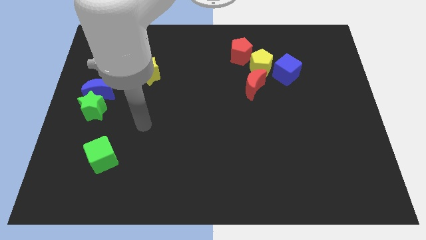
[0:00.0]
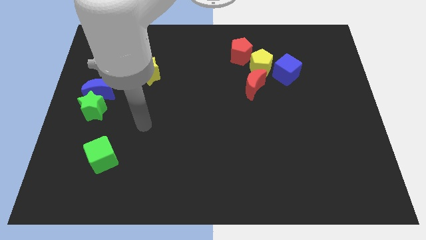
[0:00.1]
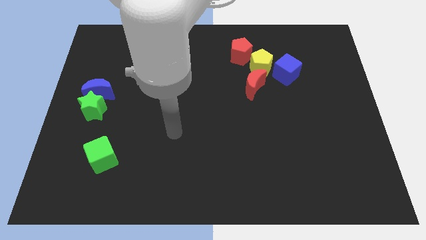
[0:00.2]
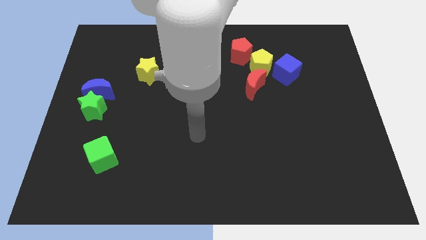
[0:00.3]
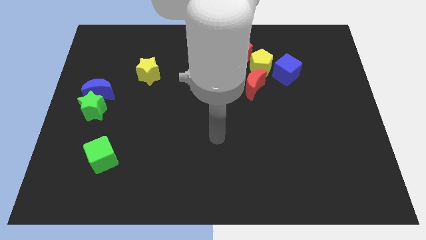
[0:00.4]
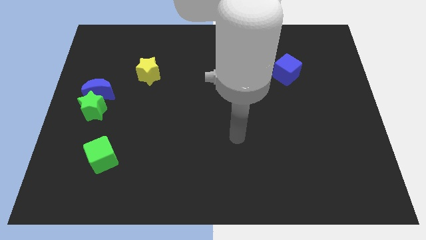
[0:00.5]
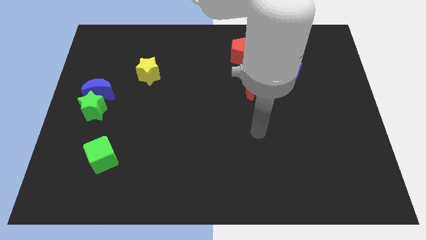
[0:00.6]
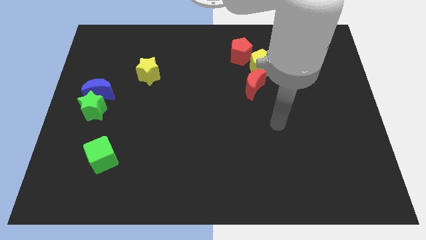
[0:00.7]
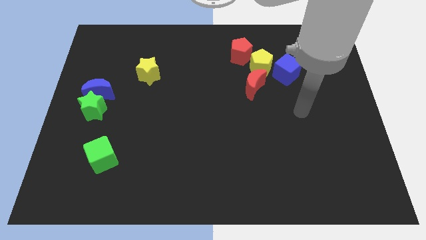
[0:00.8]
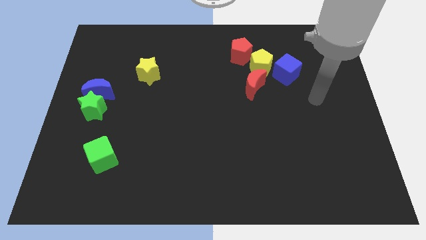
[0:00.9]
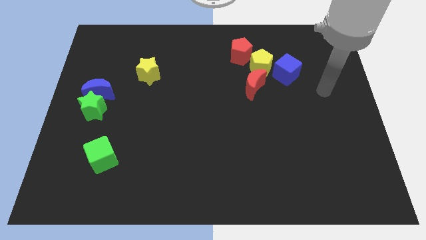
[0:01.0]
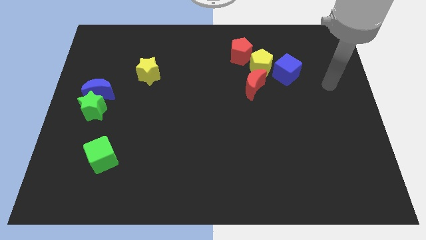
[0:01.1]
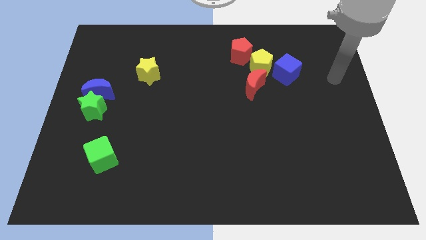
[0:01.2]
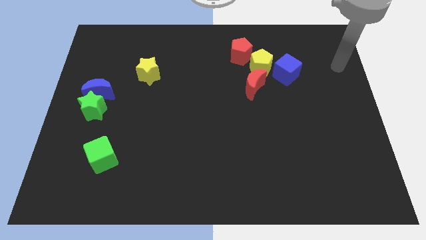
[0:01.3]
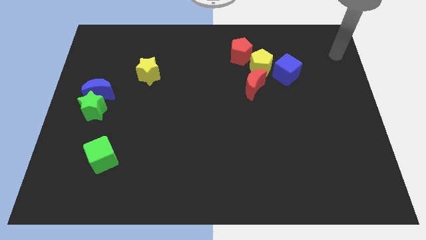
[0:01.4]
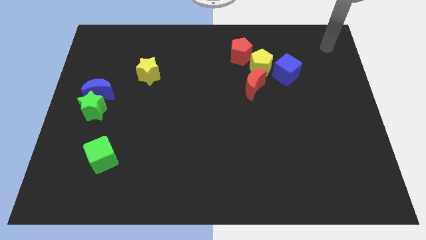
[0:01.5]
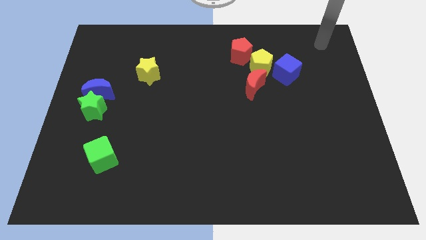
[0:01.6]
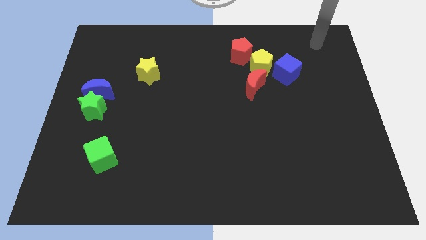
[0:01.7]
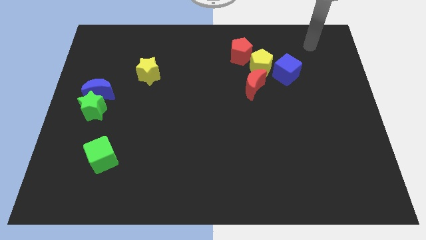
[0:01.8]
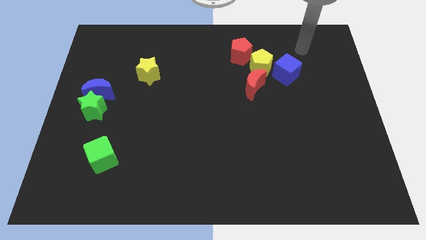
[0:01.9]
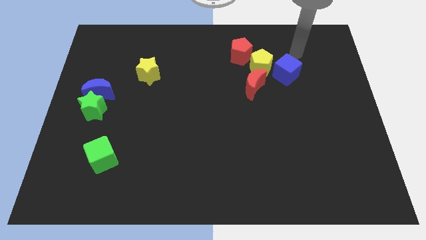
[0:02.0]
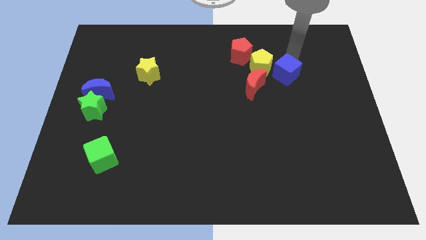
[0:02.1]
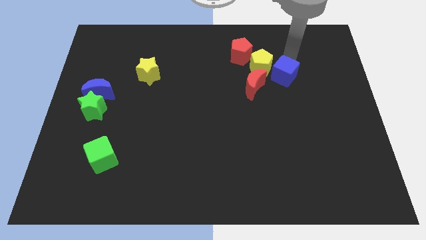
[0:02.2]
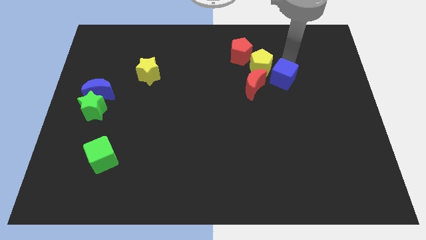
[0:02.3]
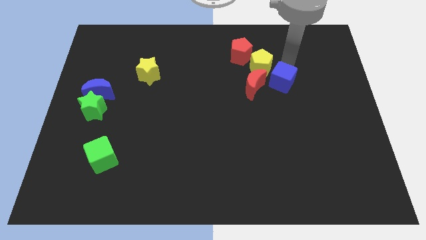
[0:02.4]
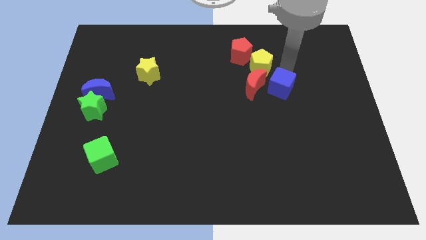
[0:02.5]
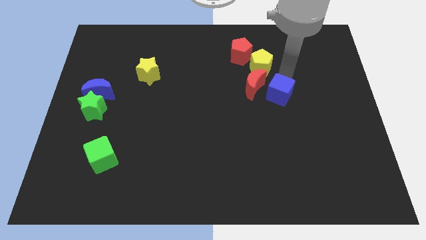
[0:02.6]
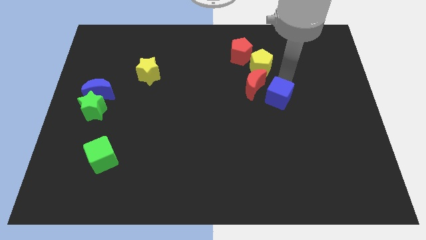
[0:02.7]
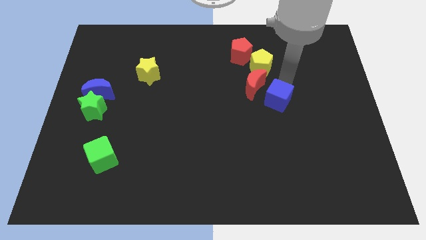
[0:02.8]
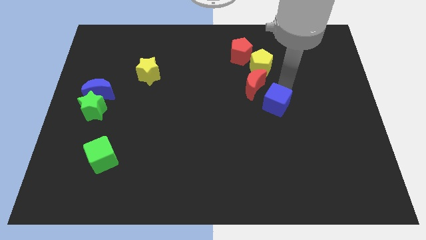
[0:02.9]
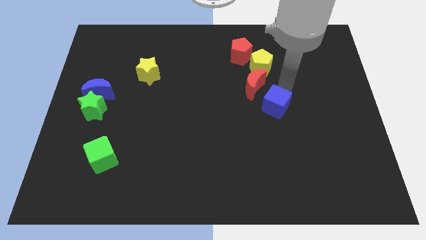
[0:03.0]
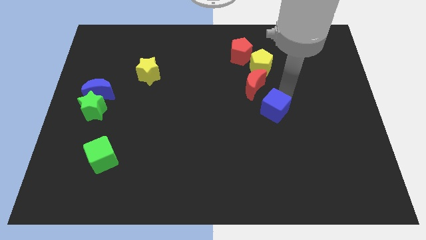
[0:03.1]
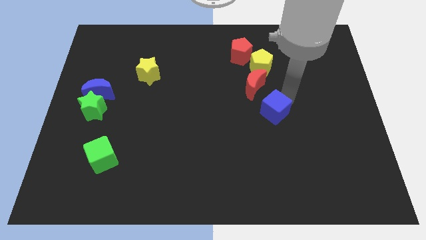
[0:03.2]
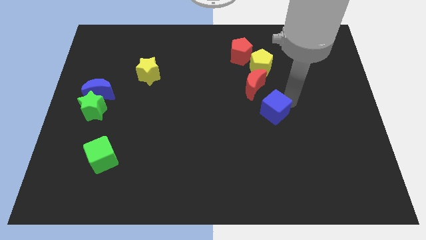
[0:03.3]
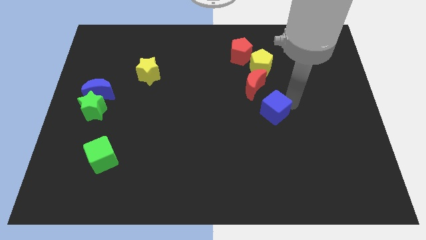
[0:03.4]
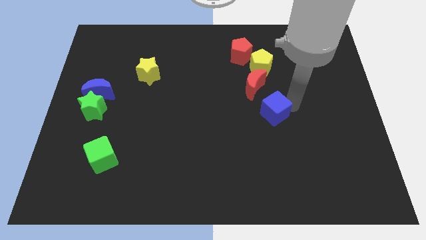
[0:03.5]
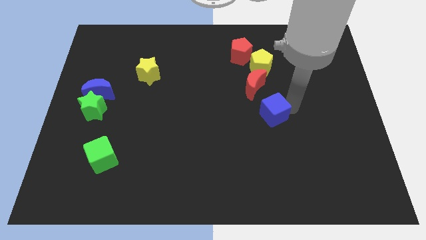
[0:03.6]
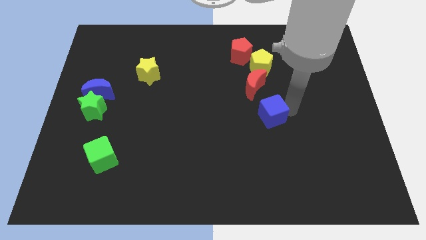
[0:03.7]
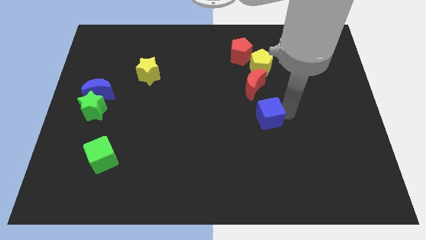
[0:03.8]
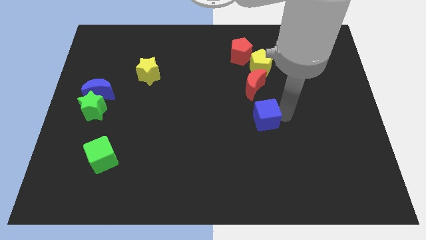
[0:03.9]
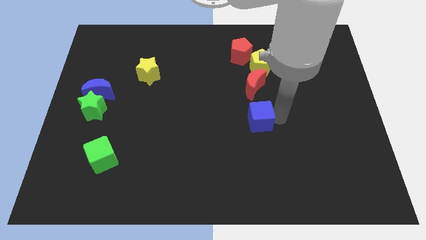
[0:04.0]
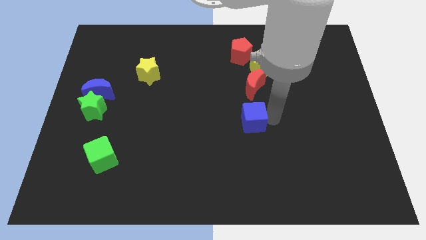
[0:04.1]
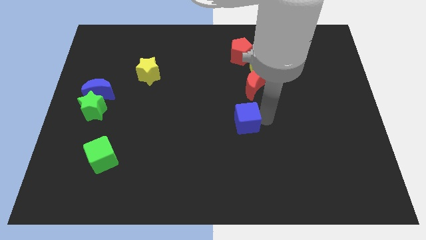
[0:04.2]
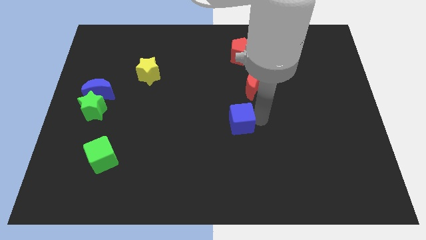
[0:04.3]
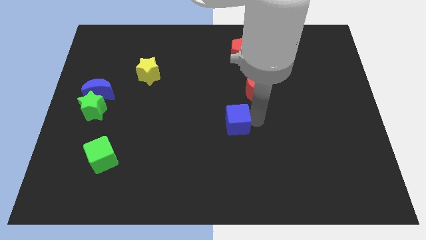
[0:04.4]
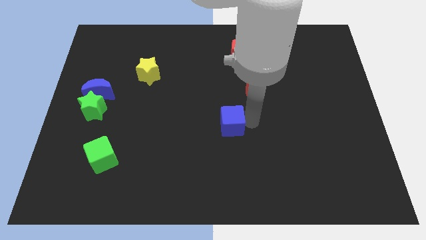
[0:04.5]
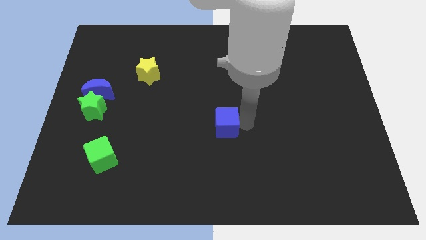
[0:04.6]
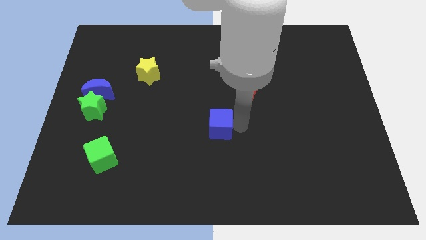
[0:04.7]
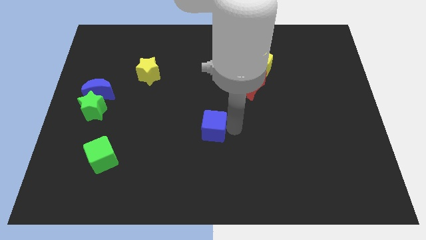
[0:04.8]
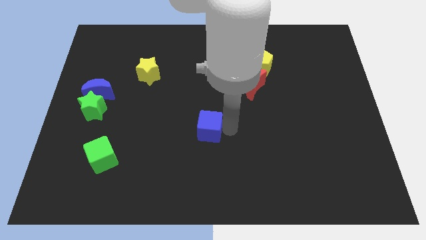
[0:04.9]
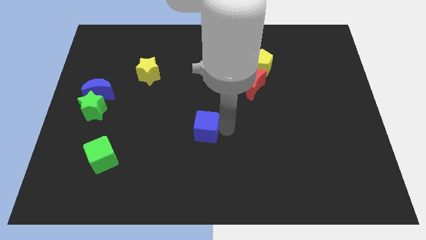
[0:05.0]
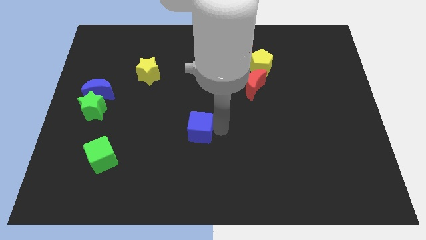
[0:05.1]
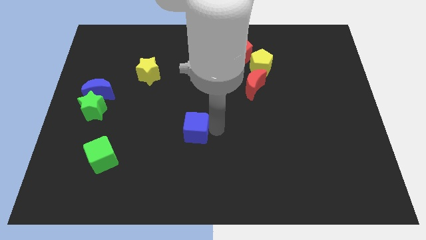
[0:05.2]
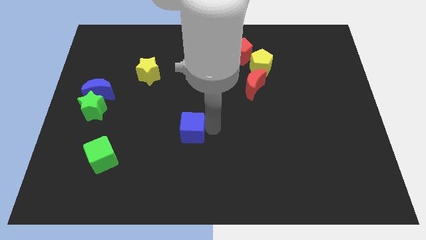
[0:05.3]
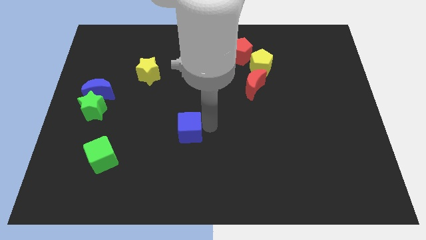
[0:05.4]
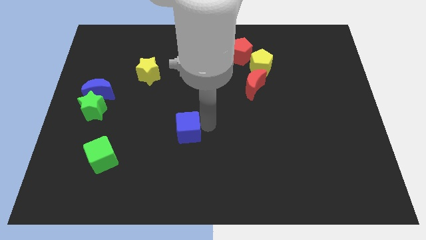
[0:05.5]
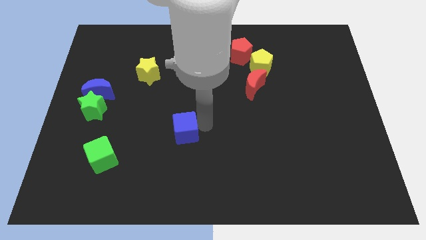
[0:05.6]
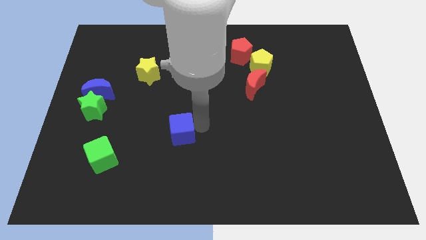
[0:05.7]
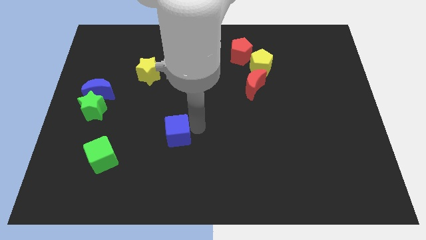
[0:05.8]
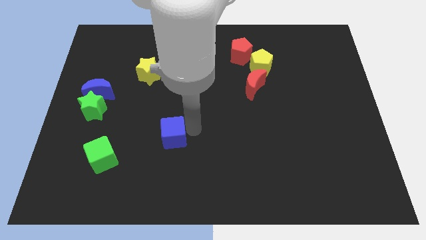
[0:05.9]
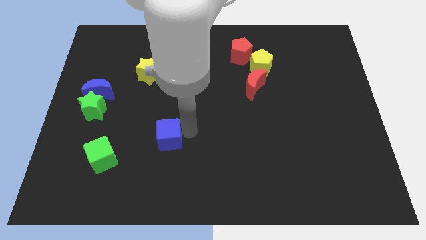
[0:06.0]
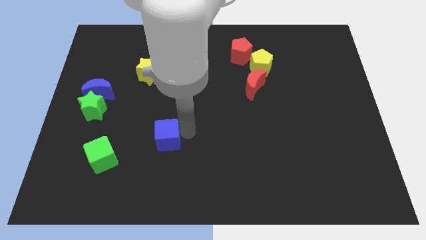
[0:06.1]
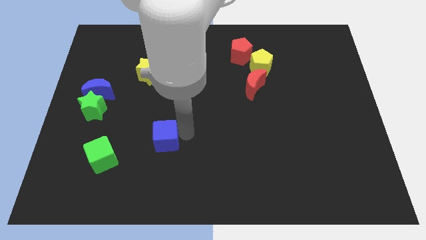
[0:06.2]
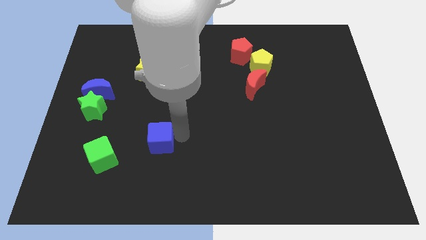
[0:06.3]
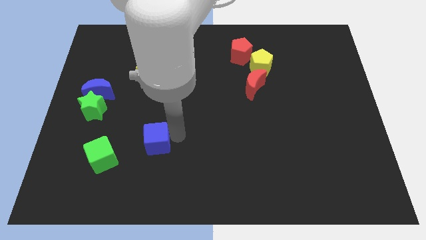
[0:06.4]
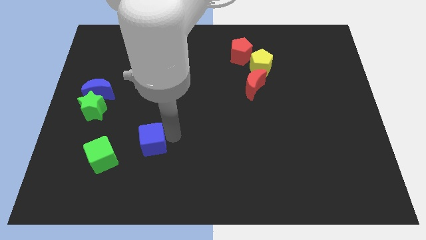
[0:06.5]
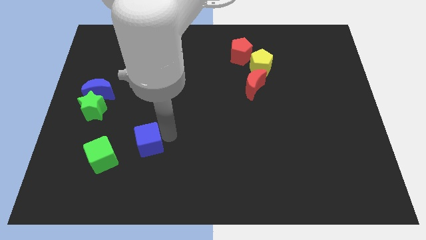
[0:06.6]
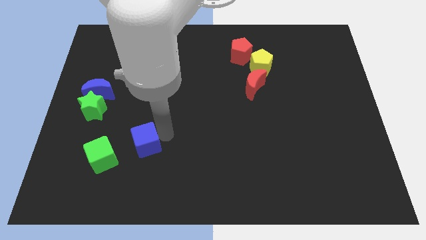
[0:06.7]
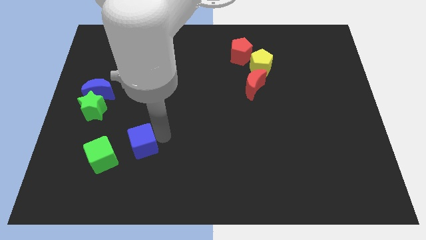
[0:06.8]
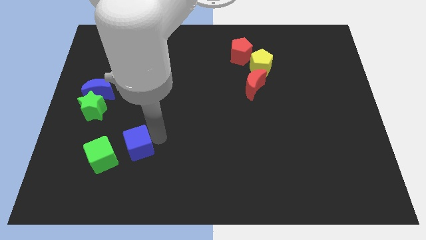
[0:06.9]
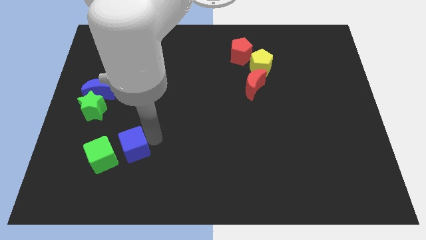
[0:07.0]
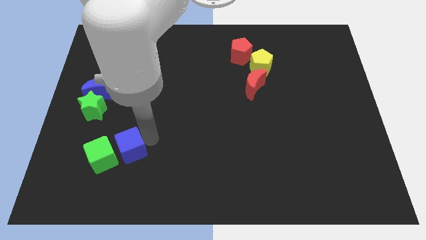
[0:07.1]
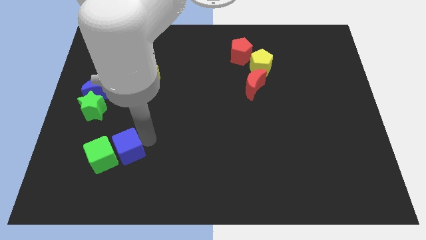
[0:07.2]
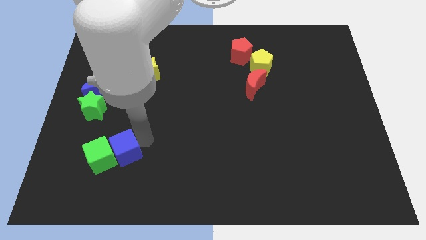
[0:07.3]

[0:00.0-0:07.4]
push the blue cube towards the green cube

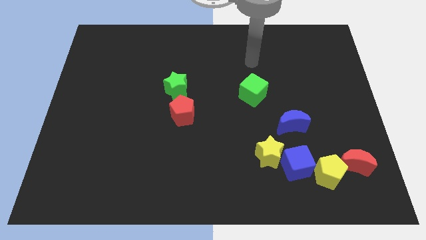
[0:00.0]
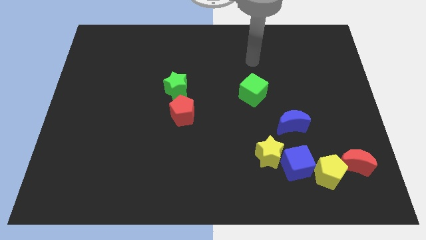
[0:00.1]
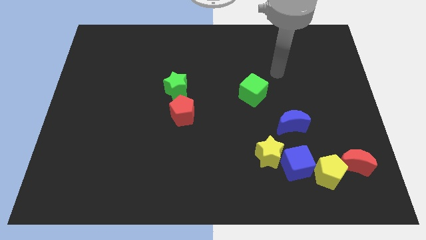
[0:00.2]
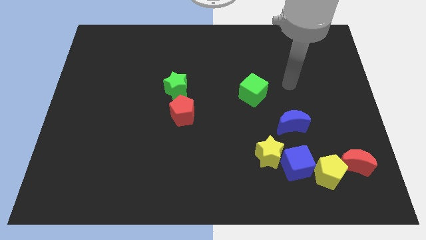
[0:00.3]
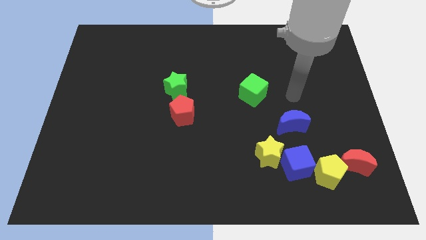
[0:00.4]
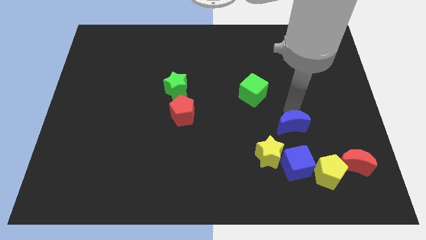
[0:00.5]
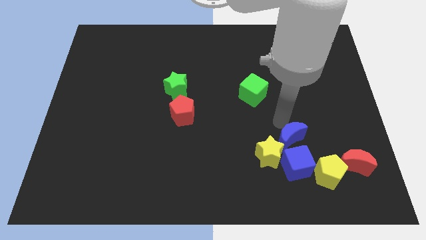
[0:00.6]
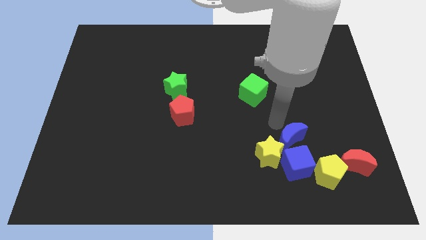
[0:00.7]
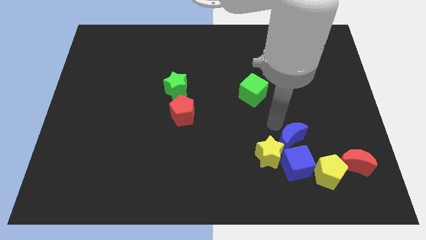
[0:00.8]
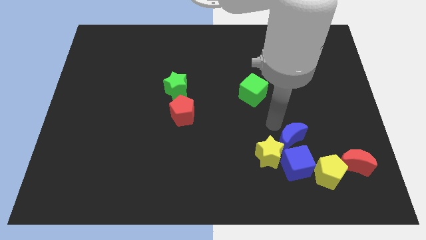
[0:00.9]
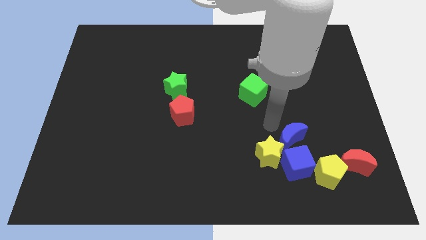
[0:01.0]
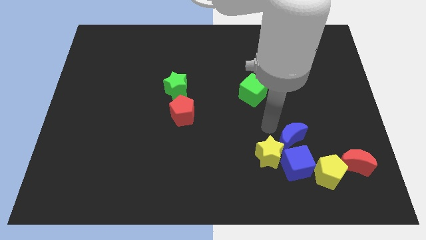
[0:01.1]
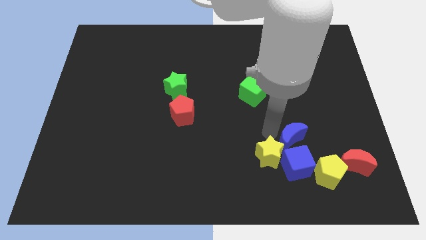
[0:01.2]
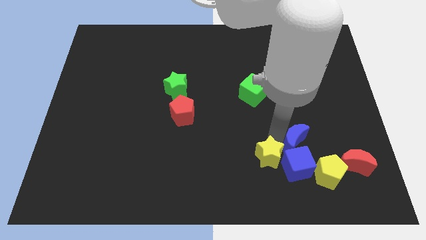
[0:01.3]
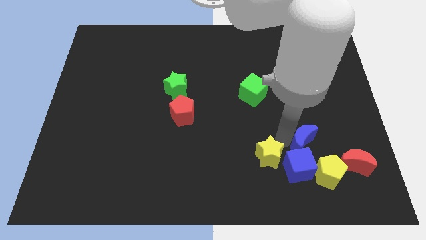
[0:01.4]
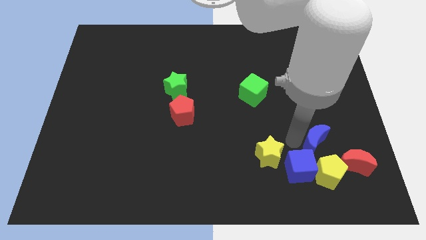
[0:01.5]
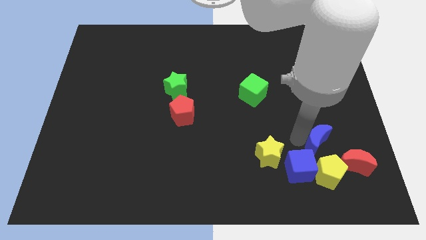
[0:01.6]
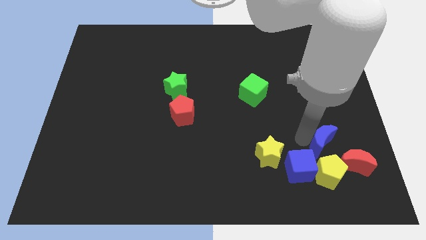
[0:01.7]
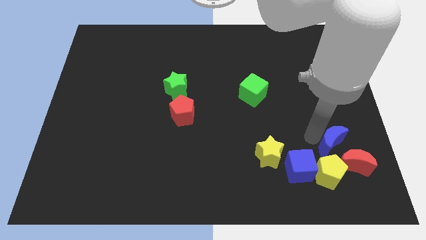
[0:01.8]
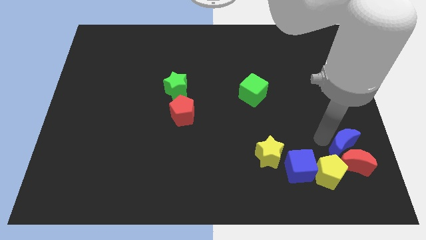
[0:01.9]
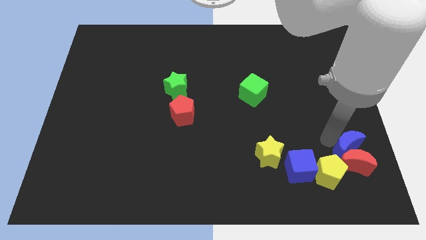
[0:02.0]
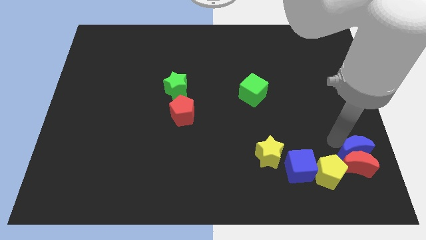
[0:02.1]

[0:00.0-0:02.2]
slide the blue moon close to the red moon
